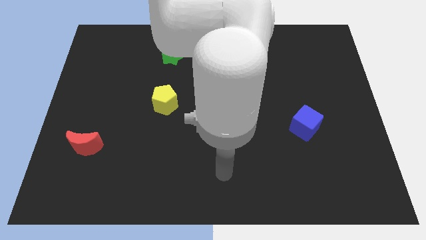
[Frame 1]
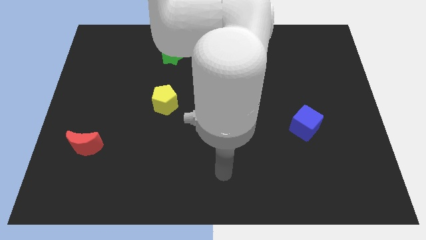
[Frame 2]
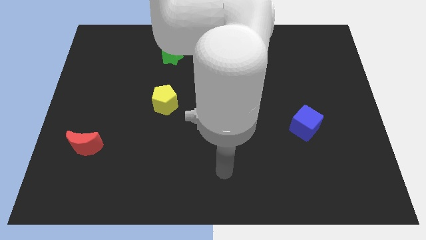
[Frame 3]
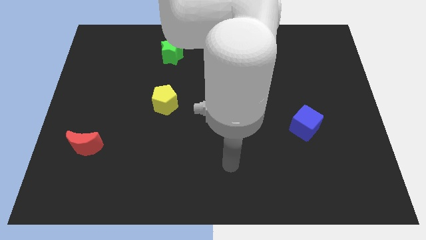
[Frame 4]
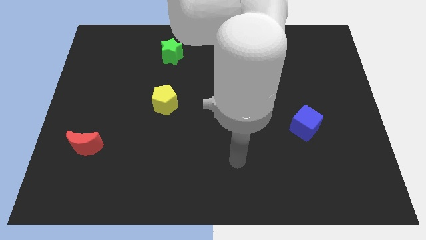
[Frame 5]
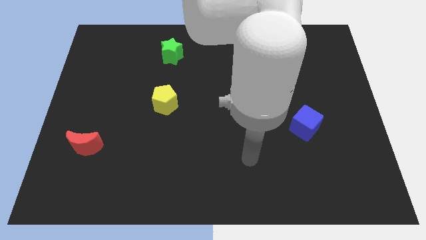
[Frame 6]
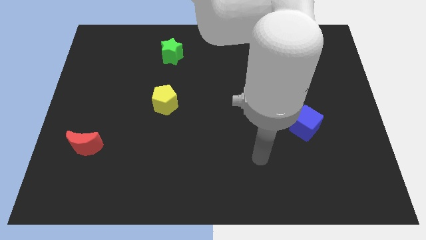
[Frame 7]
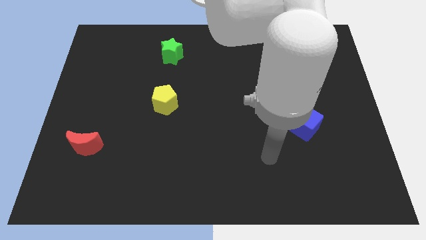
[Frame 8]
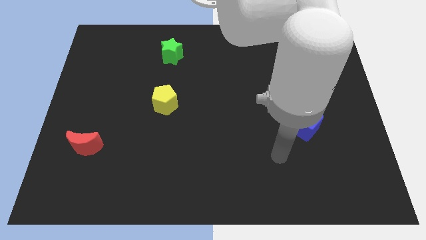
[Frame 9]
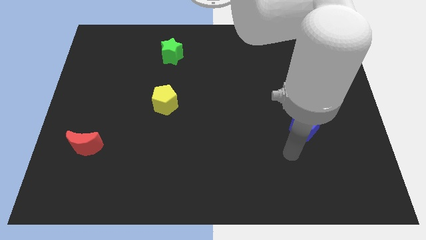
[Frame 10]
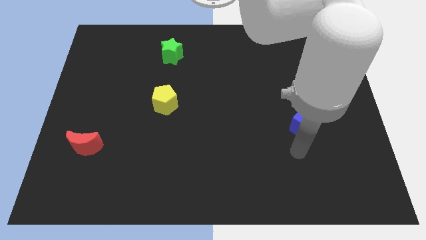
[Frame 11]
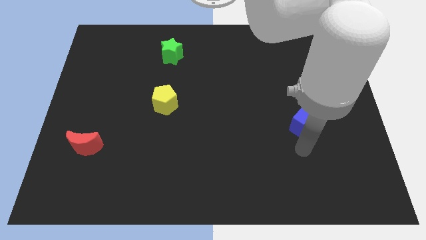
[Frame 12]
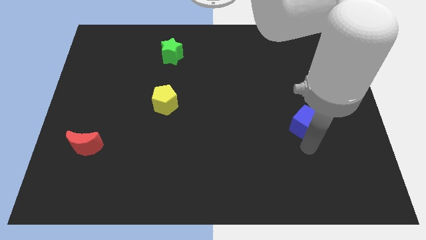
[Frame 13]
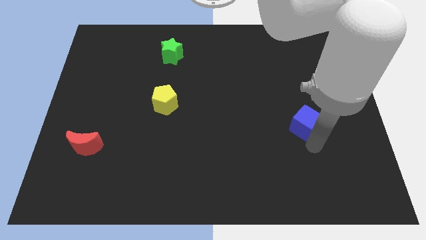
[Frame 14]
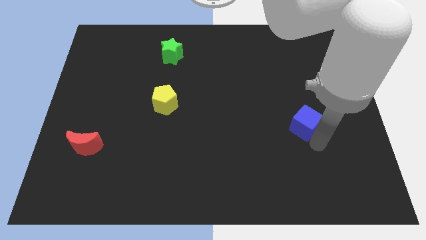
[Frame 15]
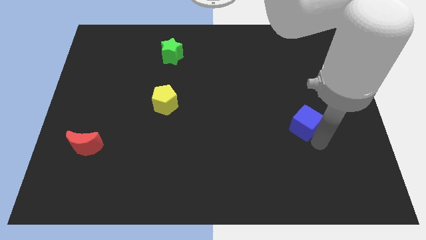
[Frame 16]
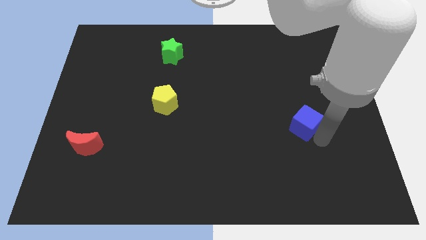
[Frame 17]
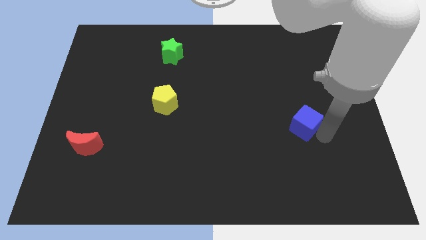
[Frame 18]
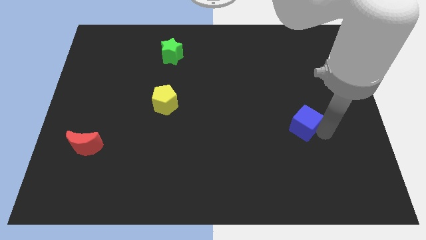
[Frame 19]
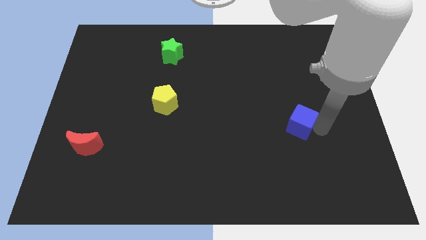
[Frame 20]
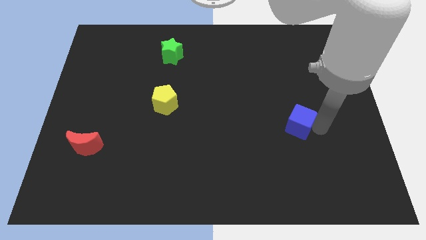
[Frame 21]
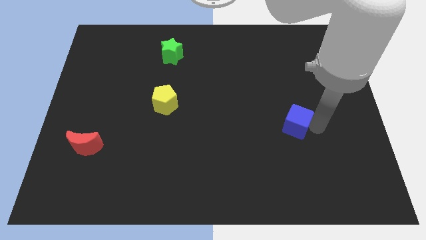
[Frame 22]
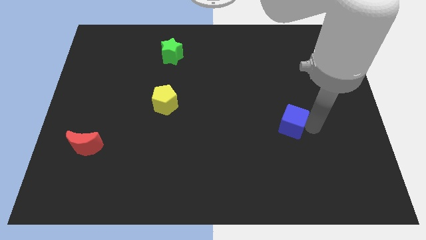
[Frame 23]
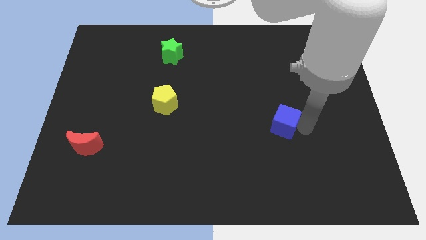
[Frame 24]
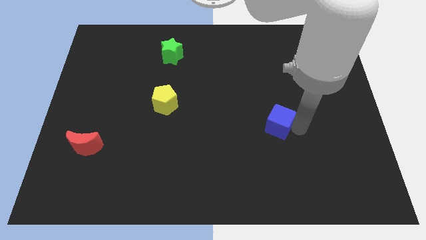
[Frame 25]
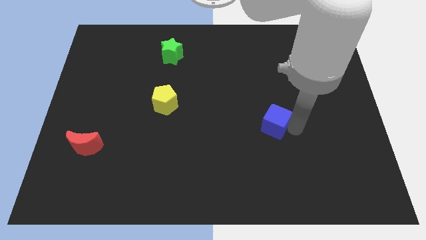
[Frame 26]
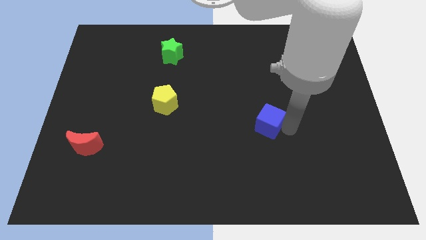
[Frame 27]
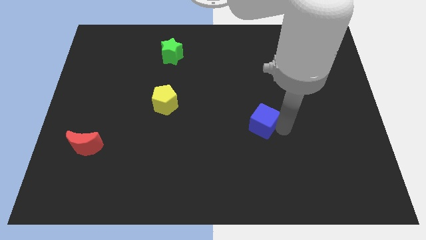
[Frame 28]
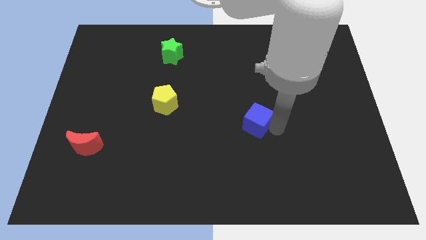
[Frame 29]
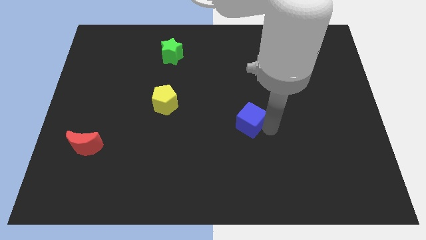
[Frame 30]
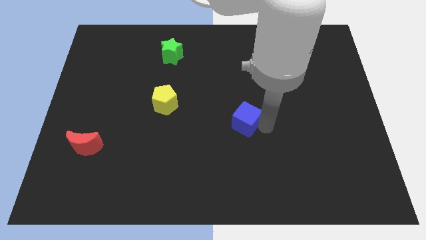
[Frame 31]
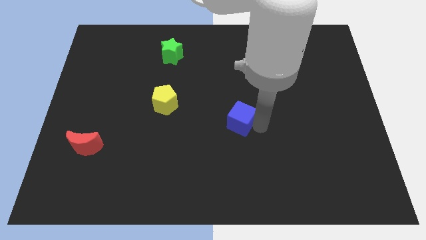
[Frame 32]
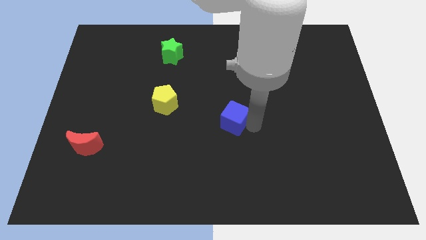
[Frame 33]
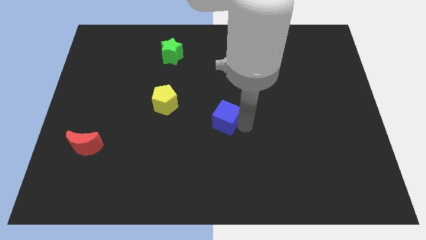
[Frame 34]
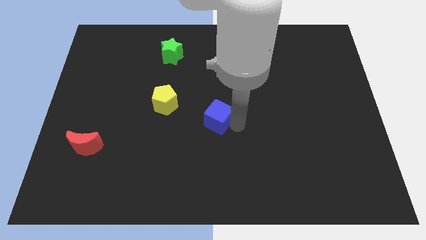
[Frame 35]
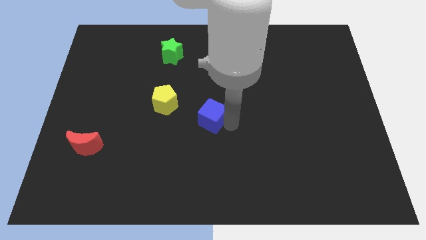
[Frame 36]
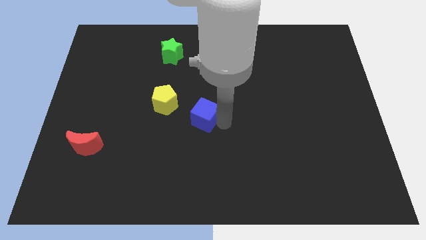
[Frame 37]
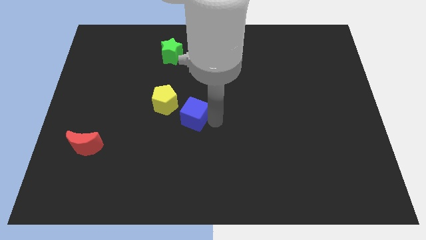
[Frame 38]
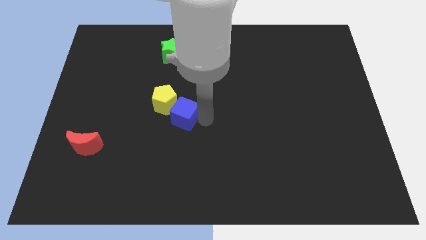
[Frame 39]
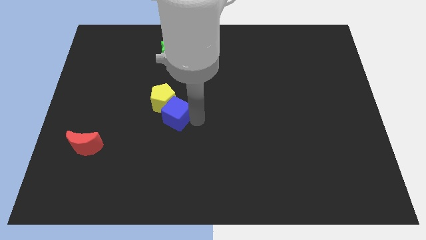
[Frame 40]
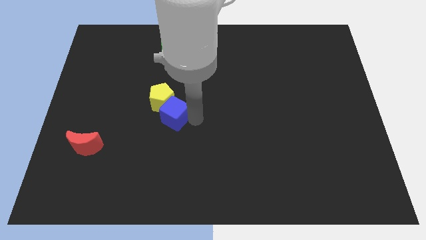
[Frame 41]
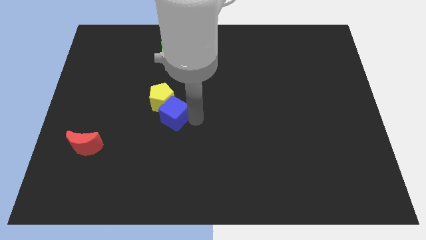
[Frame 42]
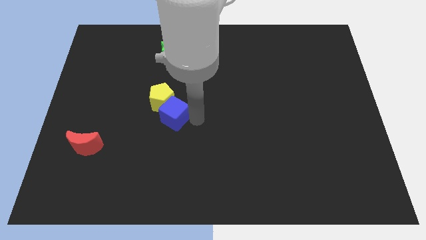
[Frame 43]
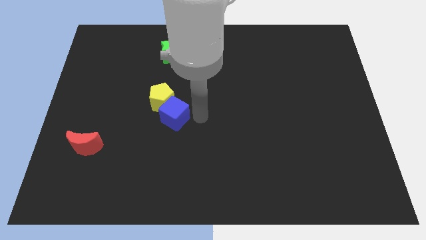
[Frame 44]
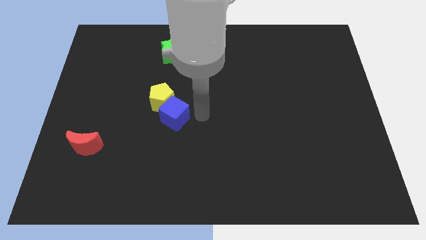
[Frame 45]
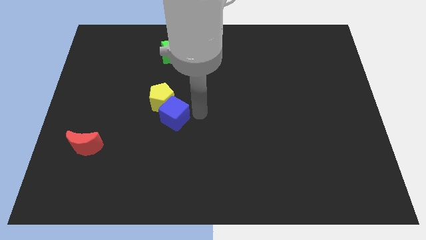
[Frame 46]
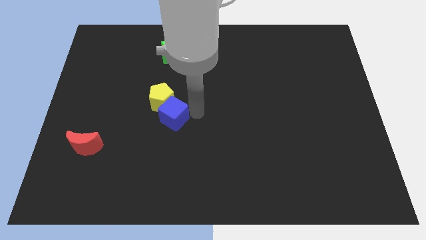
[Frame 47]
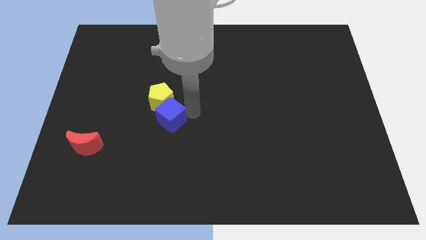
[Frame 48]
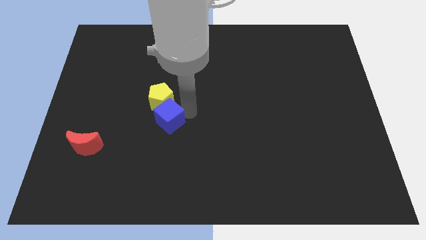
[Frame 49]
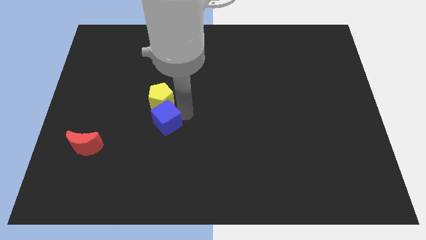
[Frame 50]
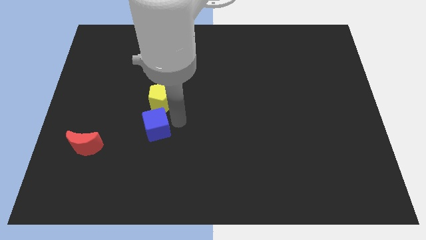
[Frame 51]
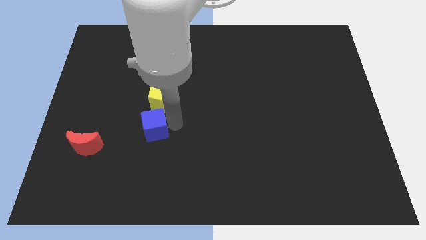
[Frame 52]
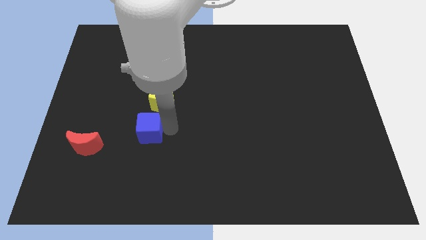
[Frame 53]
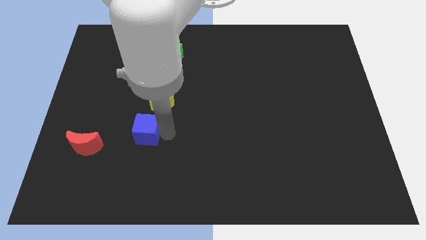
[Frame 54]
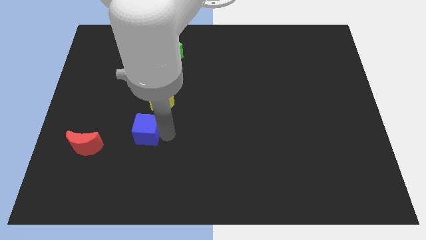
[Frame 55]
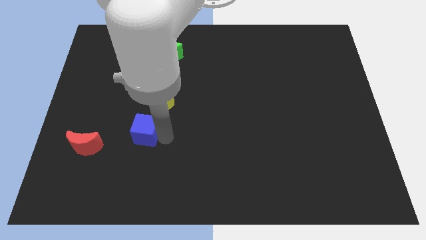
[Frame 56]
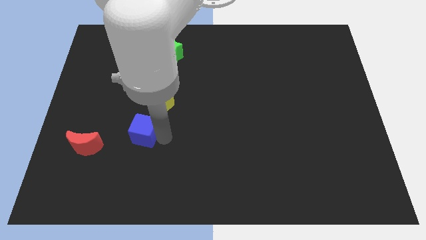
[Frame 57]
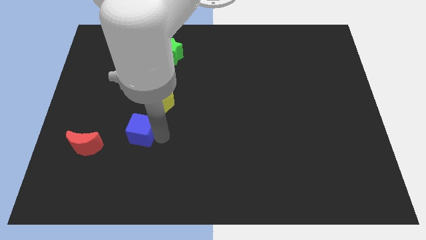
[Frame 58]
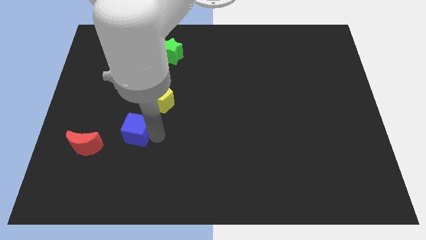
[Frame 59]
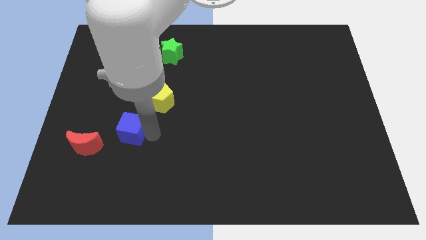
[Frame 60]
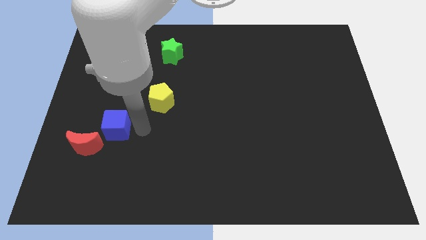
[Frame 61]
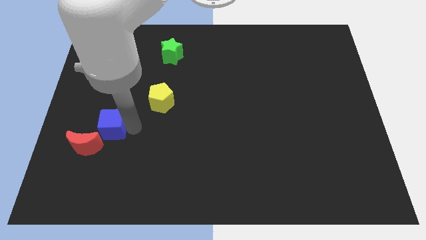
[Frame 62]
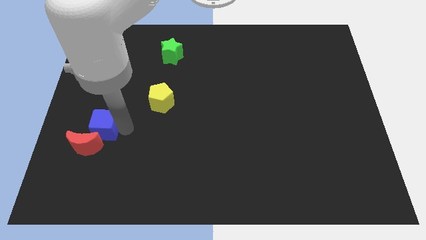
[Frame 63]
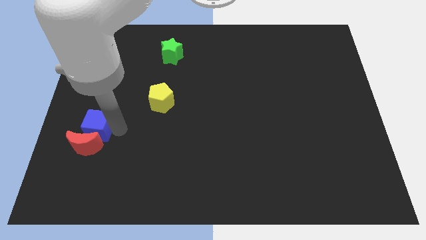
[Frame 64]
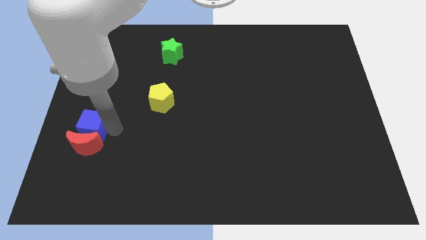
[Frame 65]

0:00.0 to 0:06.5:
push the cube close to the red moon

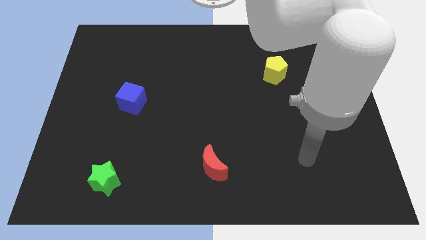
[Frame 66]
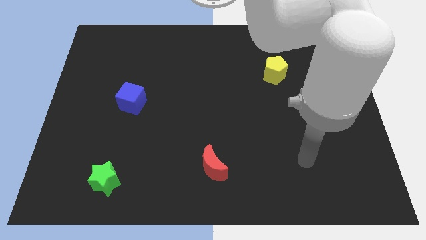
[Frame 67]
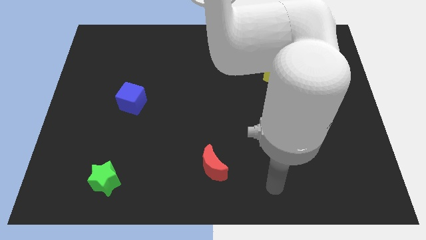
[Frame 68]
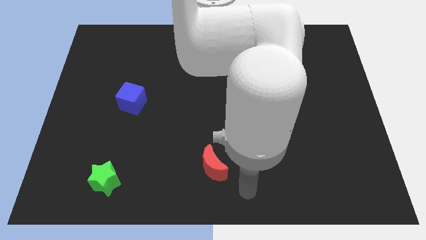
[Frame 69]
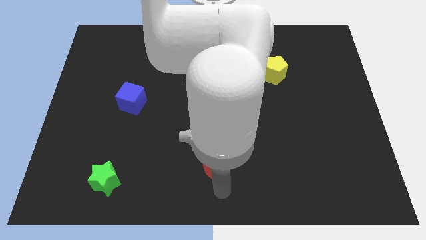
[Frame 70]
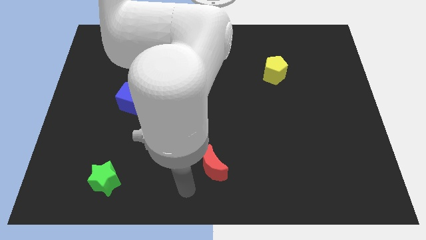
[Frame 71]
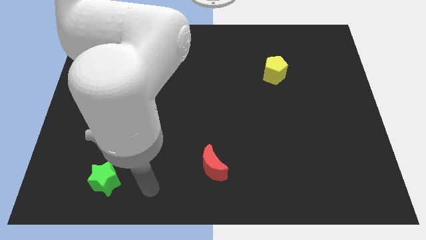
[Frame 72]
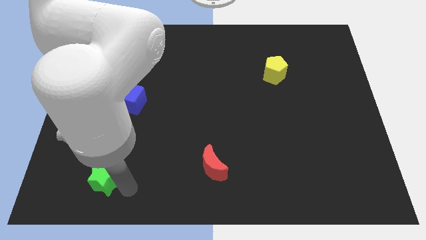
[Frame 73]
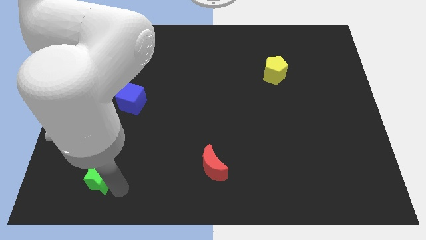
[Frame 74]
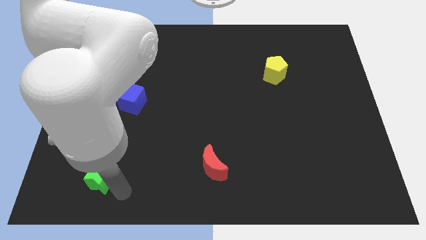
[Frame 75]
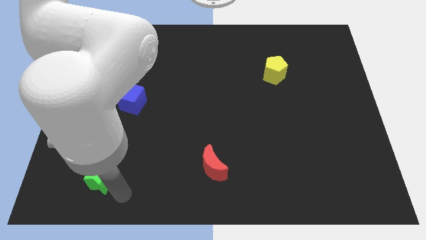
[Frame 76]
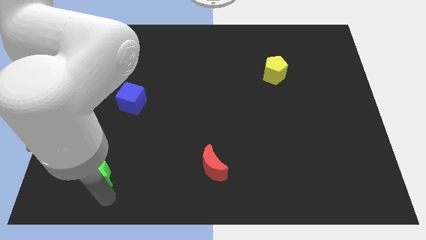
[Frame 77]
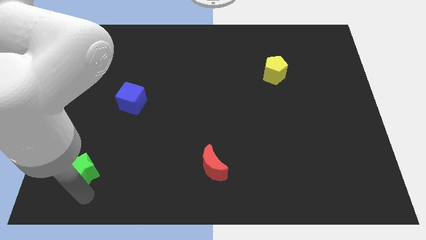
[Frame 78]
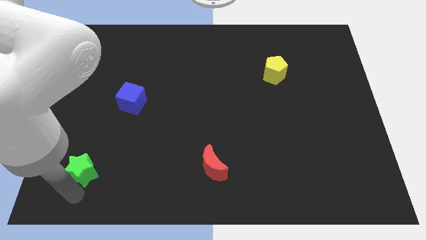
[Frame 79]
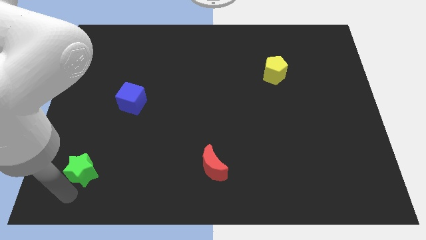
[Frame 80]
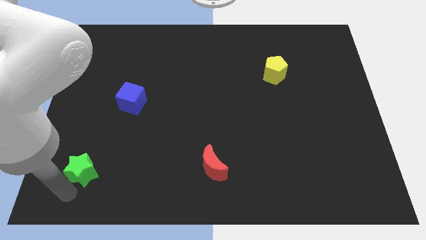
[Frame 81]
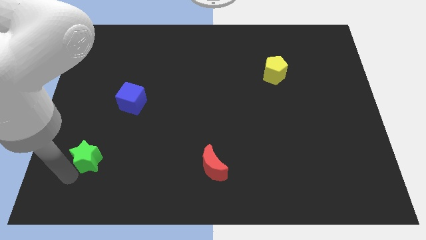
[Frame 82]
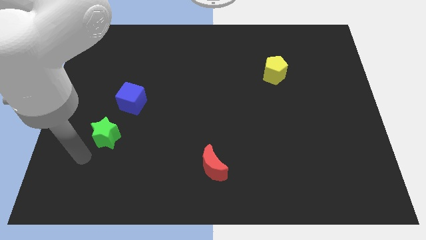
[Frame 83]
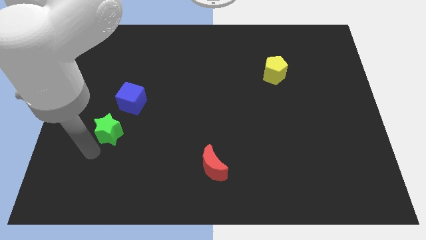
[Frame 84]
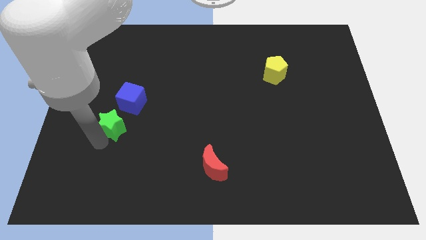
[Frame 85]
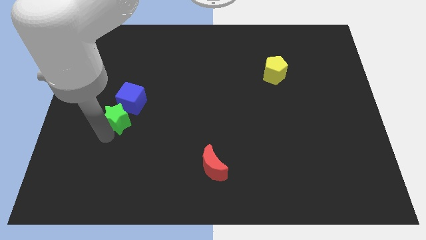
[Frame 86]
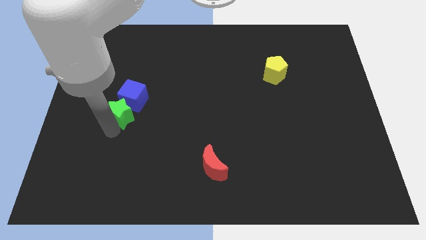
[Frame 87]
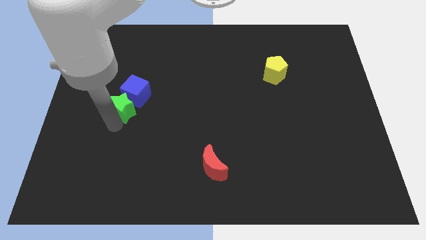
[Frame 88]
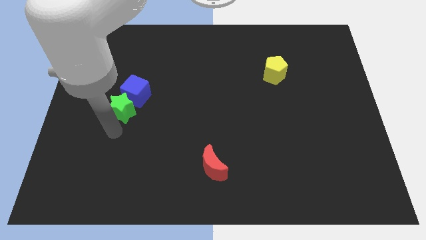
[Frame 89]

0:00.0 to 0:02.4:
push the star close to the blue block
